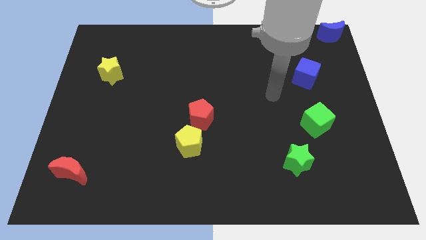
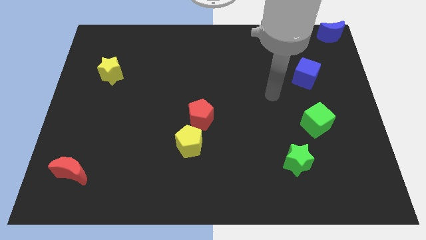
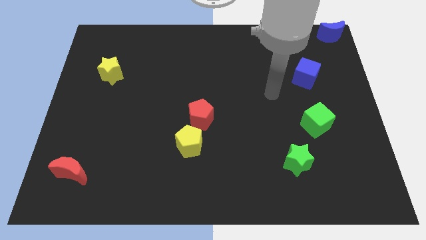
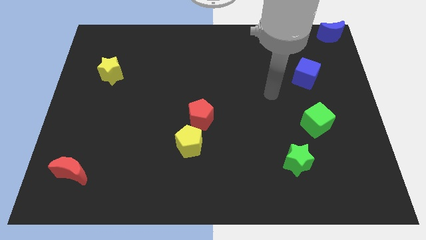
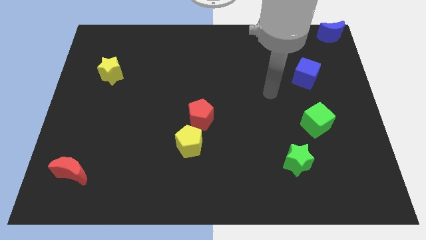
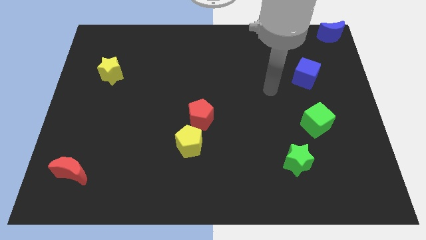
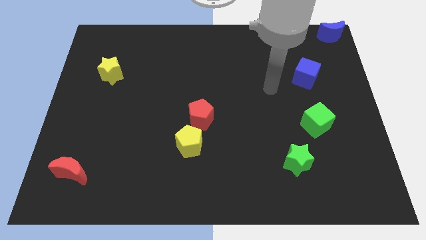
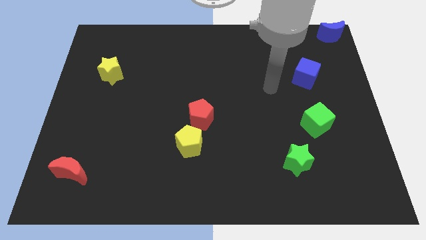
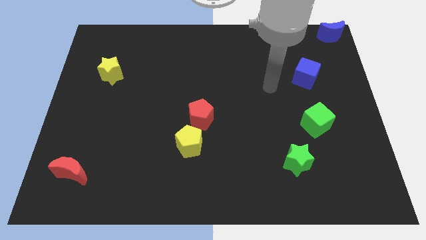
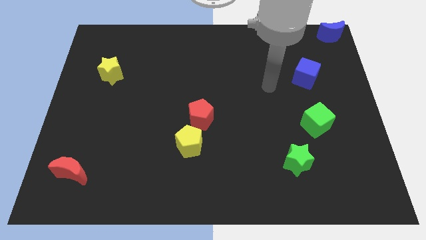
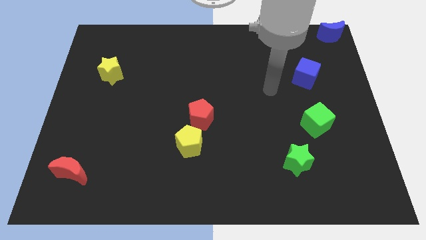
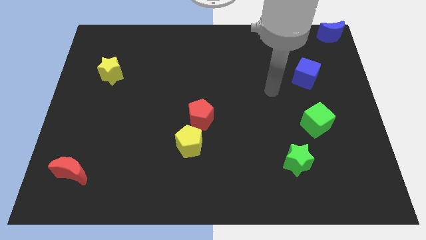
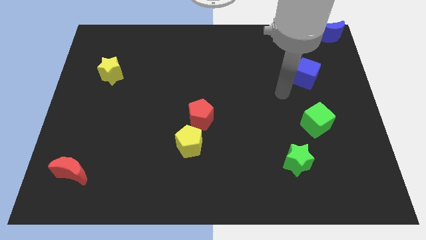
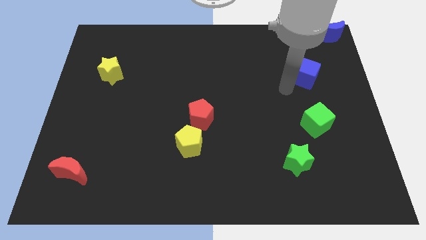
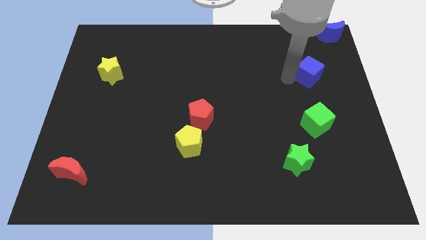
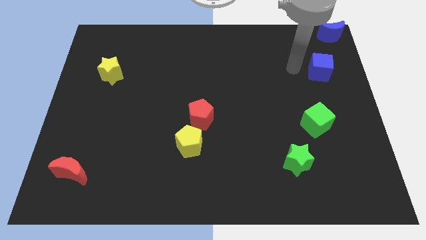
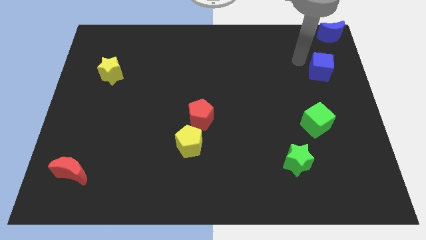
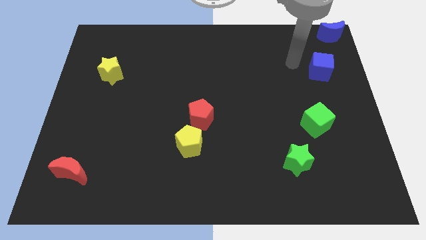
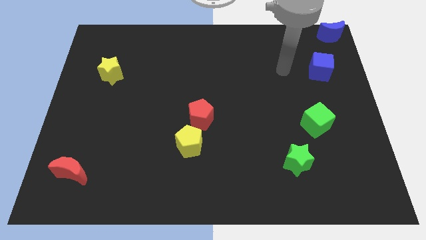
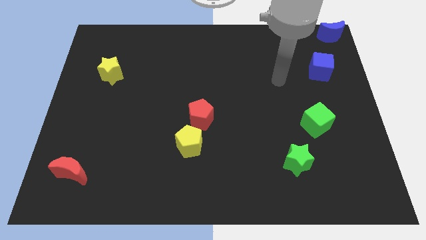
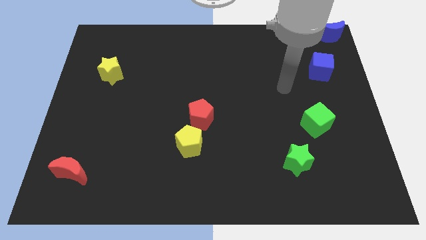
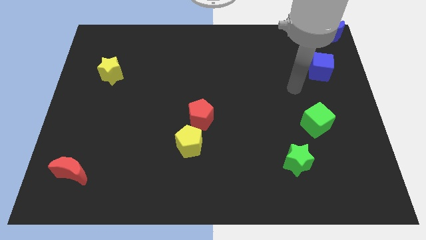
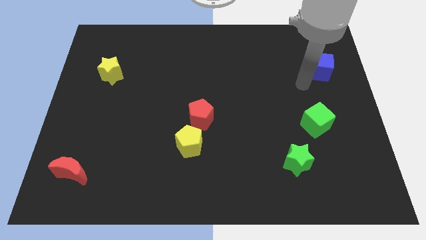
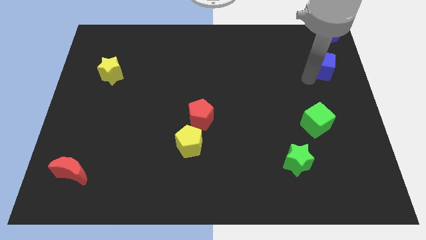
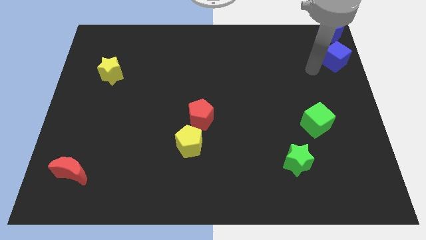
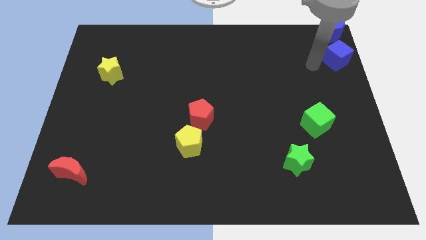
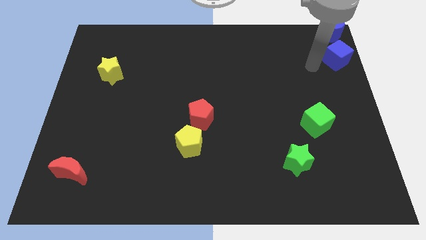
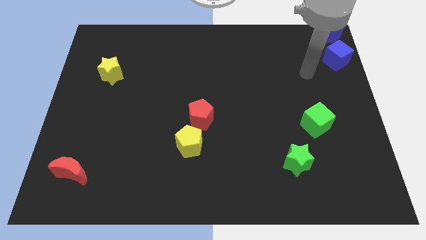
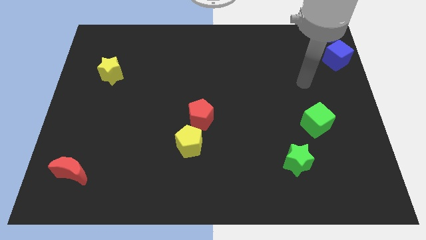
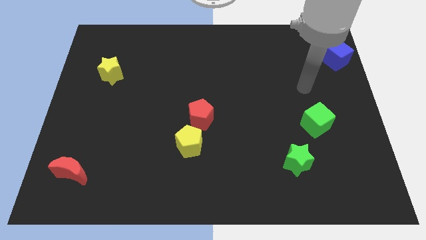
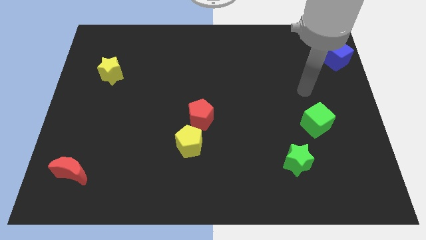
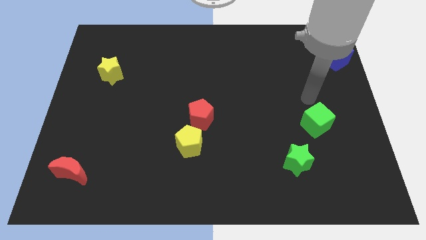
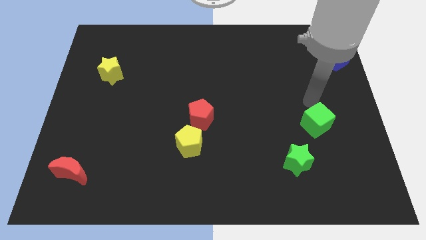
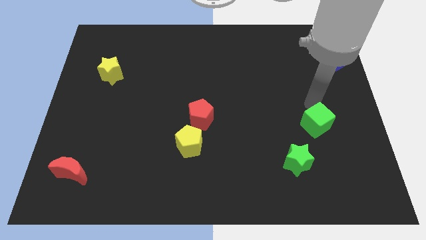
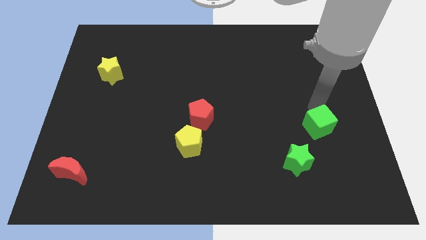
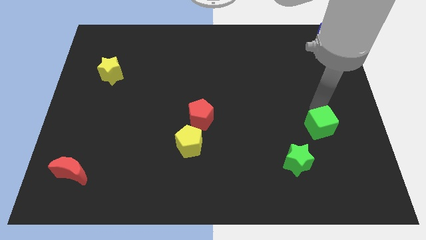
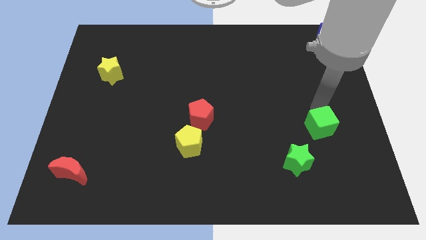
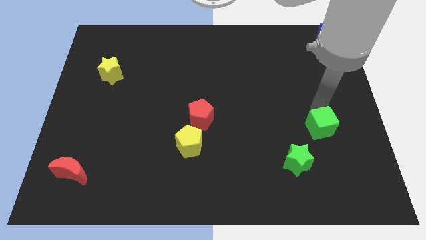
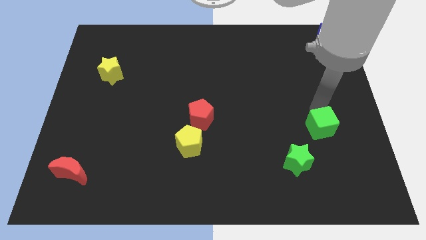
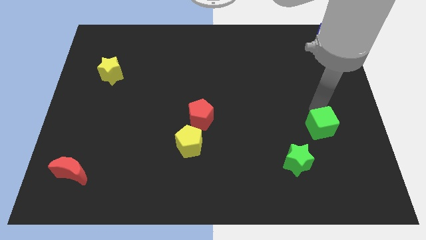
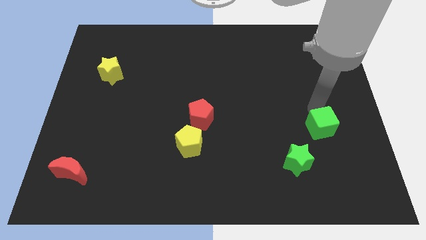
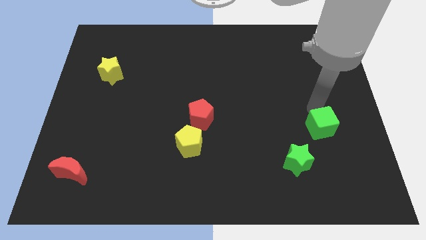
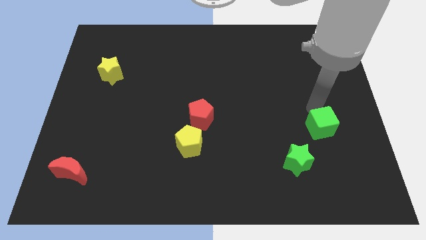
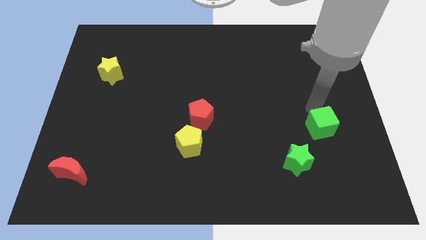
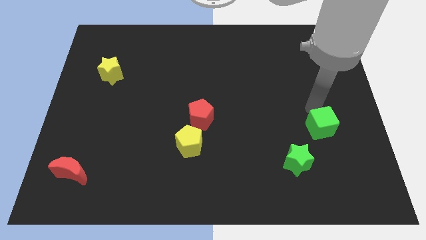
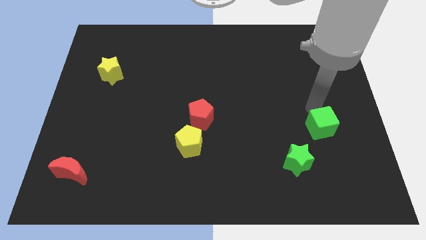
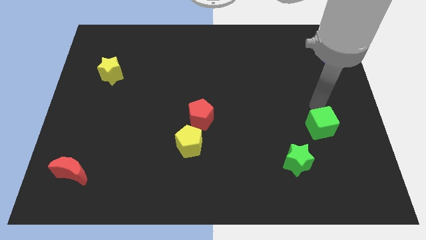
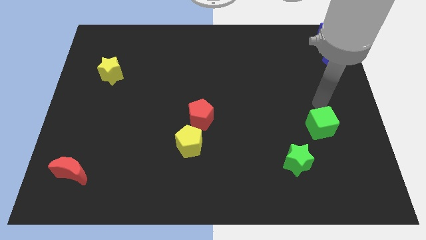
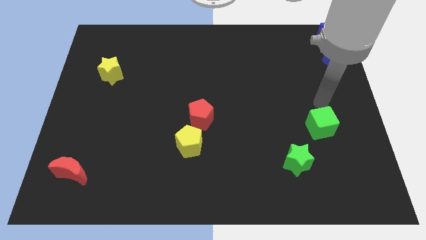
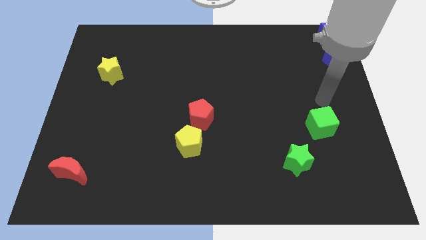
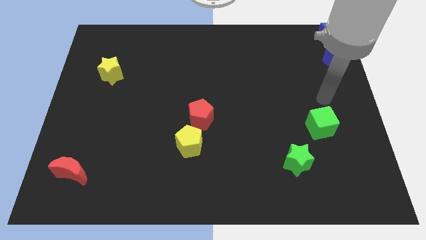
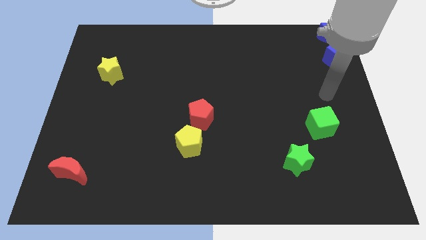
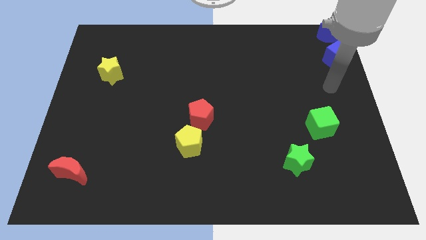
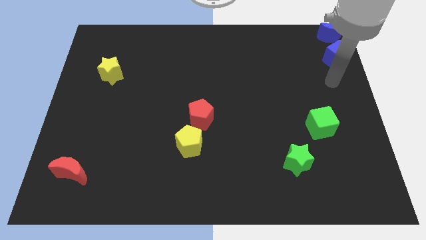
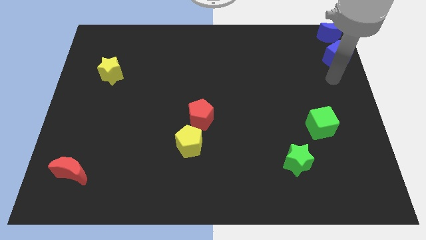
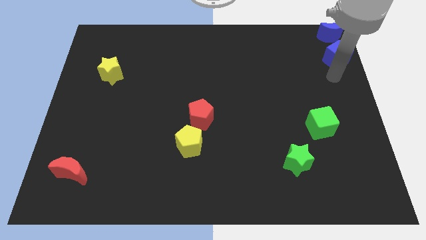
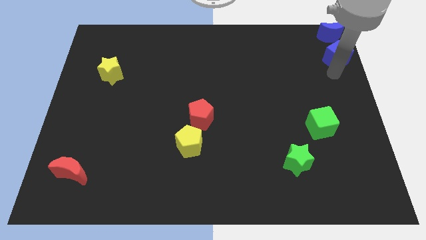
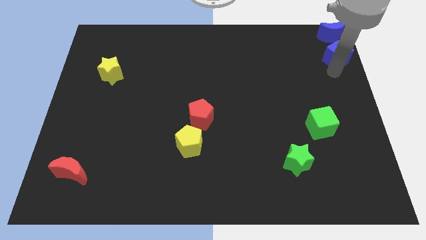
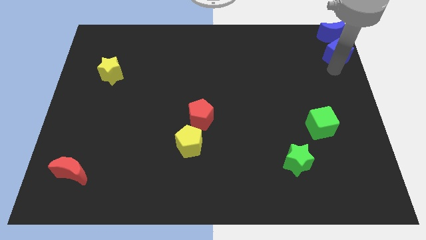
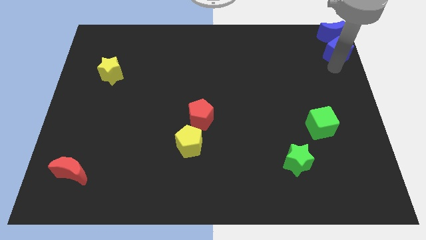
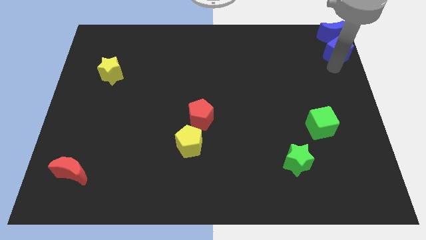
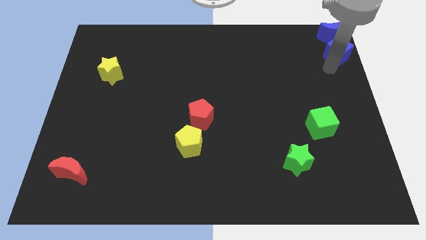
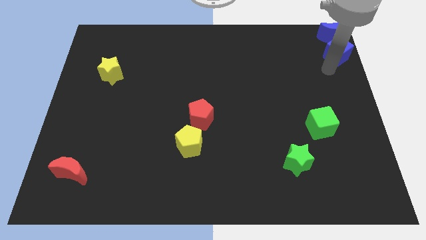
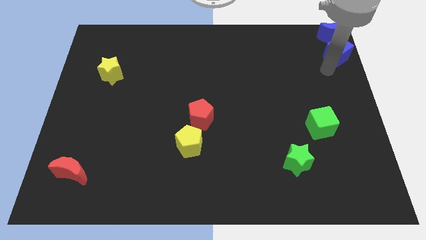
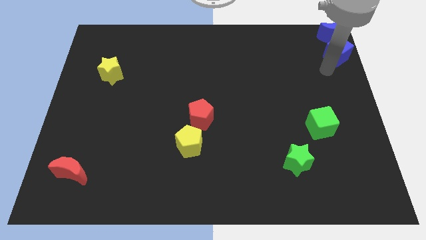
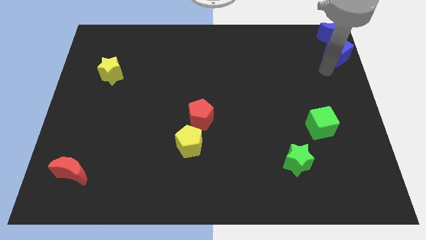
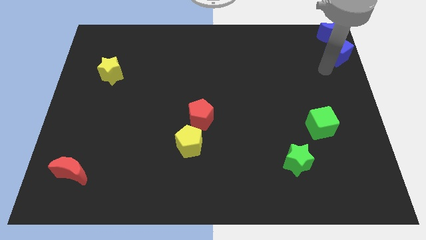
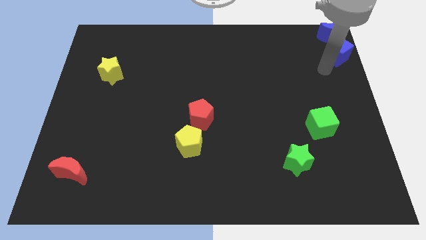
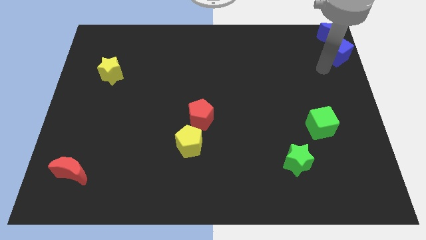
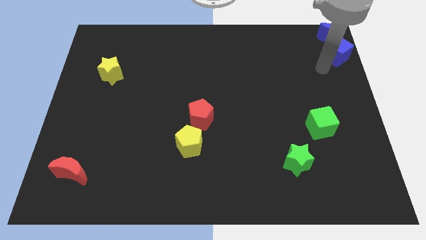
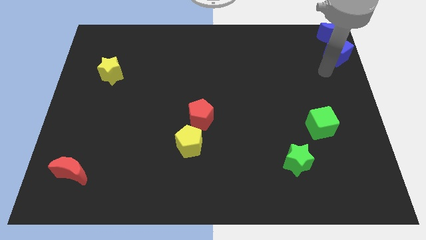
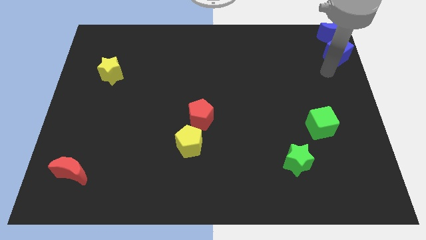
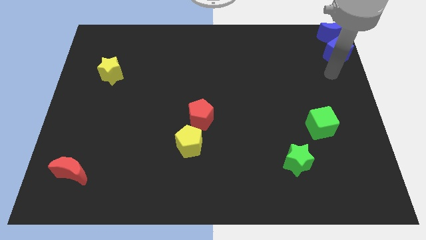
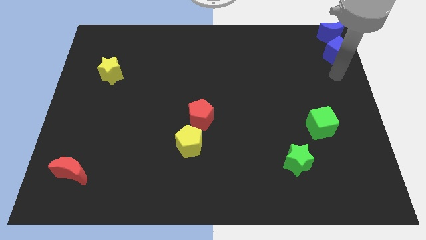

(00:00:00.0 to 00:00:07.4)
push cube below the blue moon

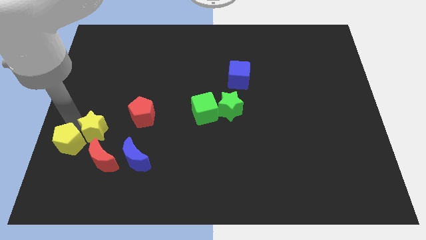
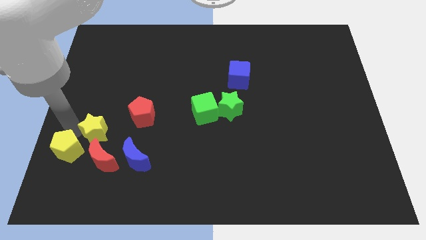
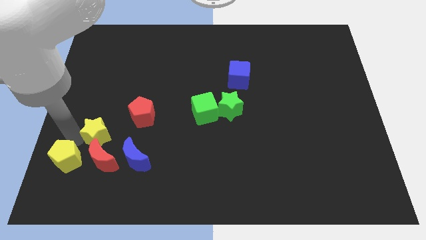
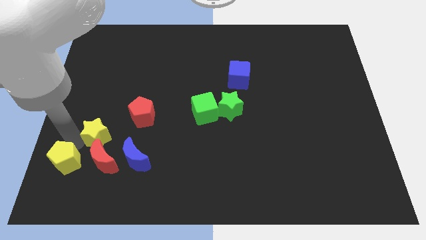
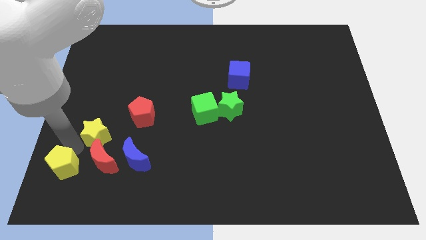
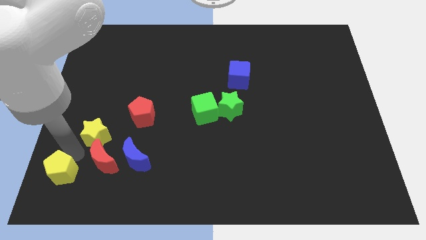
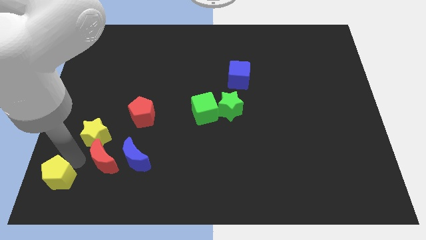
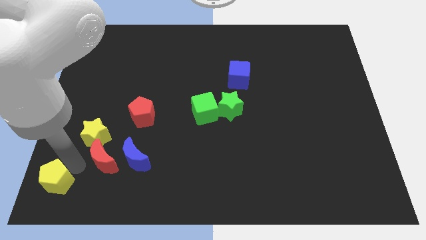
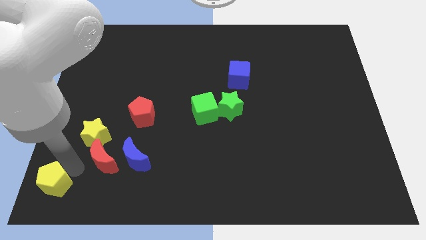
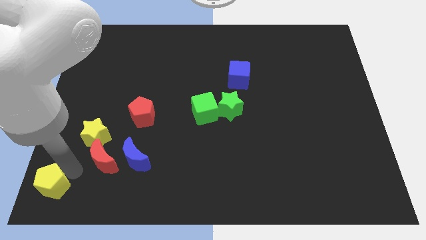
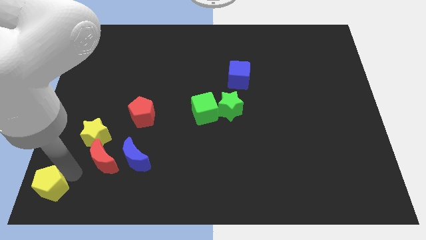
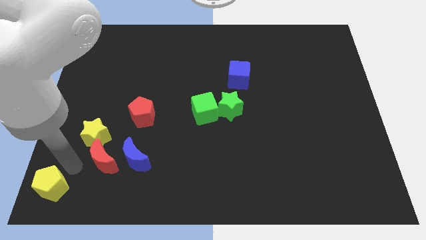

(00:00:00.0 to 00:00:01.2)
push the yellow pentagon away from the yellow star

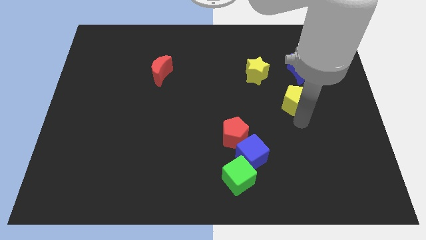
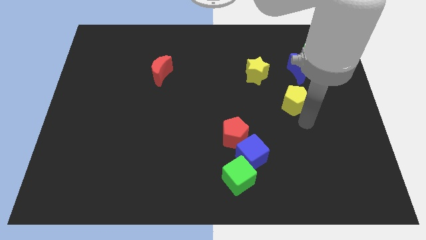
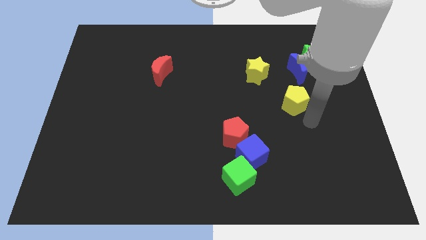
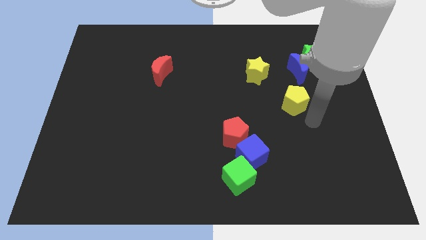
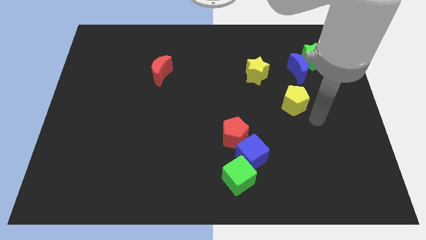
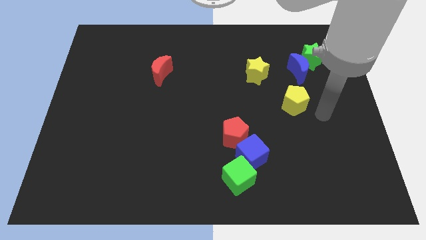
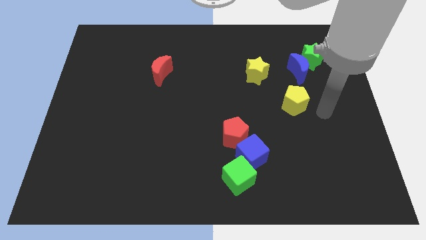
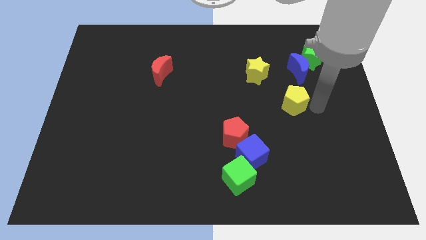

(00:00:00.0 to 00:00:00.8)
point your arm to the right side of yellow pentagon
